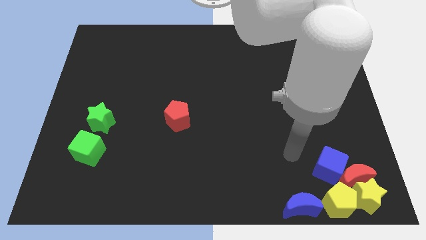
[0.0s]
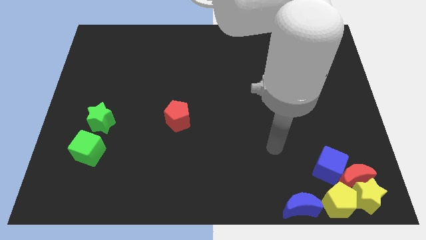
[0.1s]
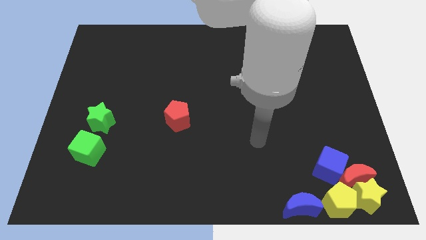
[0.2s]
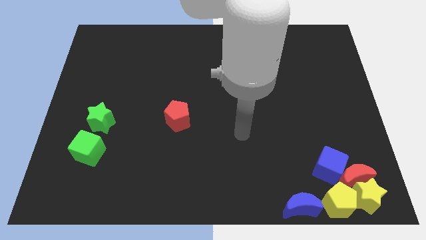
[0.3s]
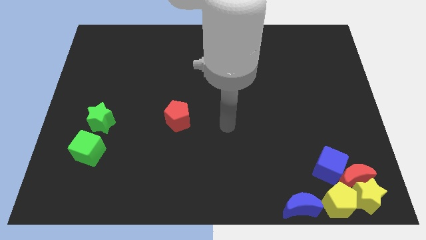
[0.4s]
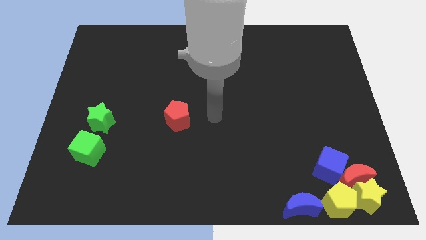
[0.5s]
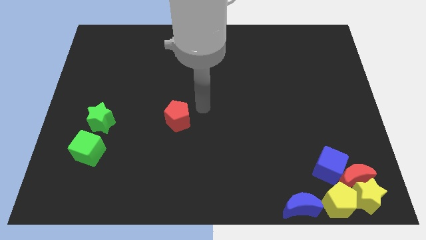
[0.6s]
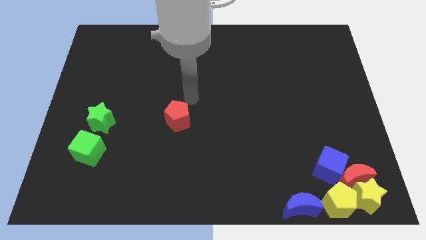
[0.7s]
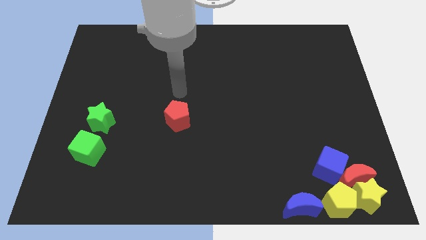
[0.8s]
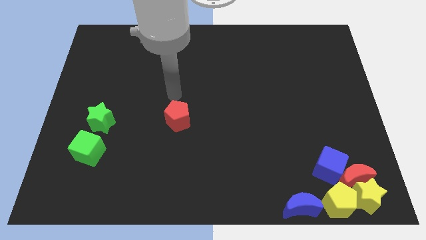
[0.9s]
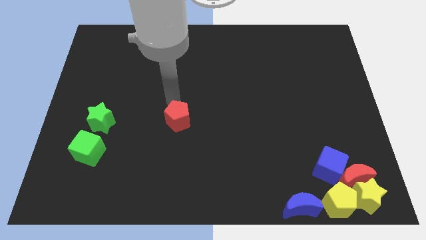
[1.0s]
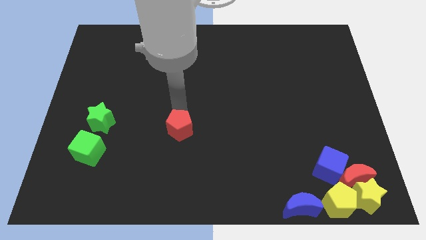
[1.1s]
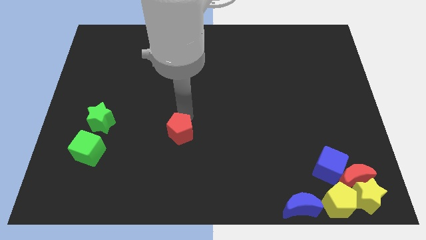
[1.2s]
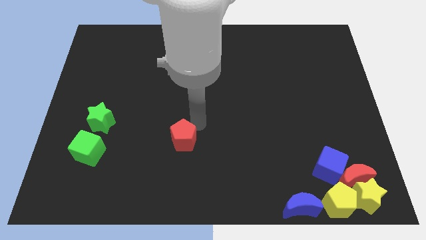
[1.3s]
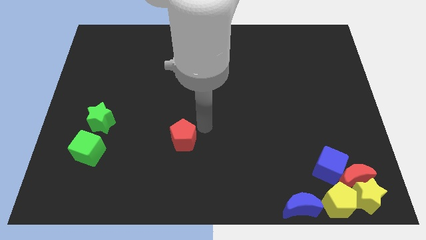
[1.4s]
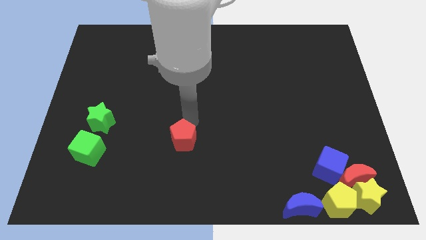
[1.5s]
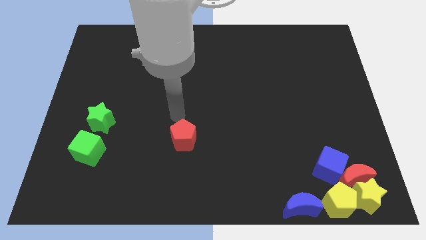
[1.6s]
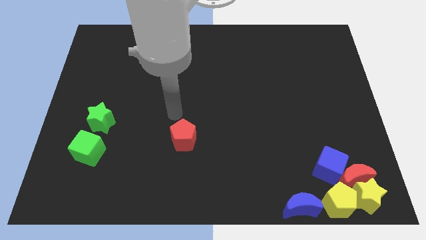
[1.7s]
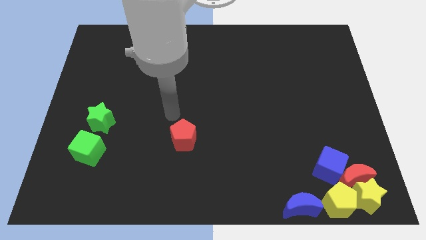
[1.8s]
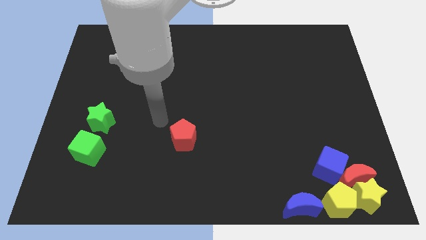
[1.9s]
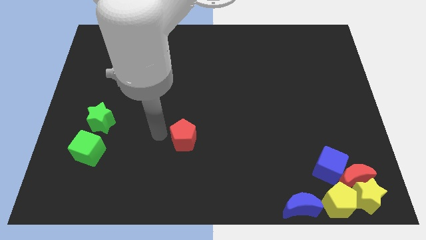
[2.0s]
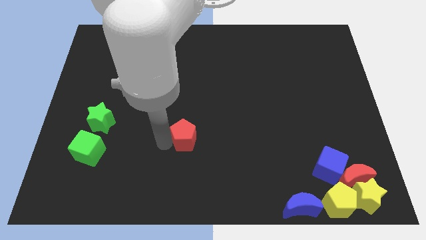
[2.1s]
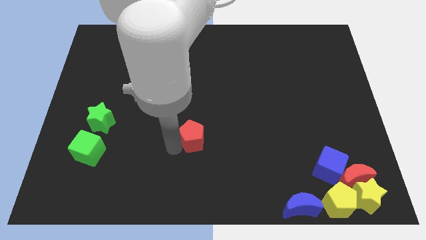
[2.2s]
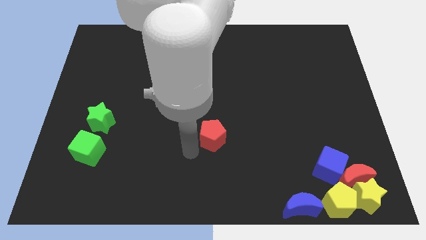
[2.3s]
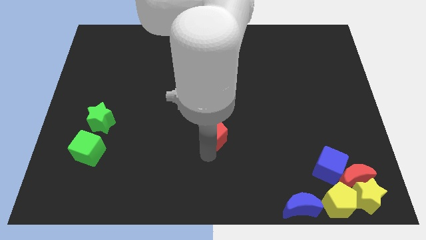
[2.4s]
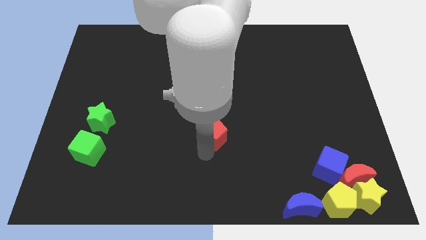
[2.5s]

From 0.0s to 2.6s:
slide the red pentagon towards the center of the board

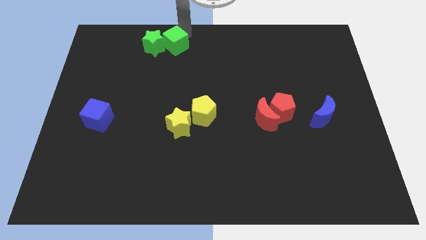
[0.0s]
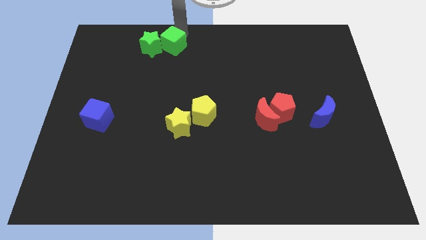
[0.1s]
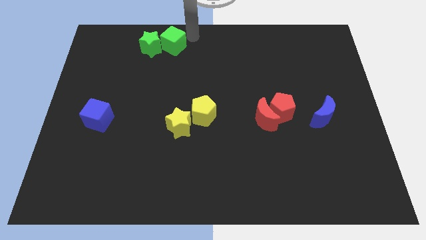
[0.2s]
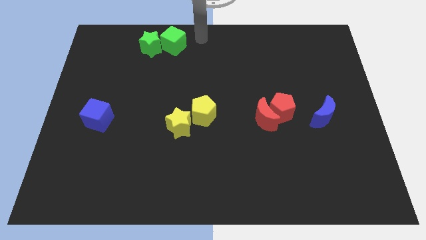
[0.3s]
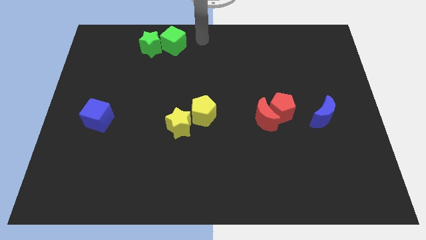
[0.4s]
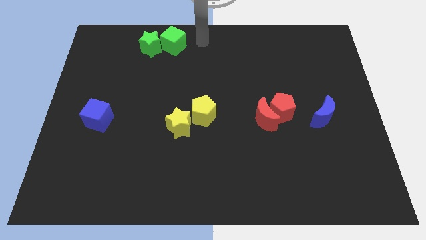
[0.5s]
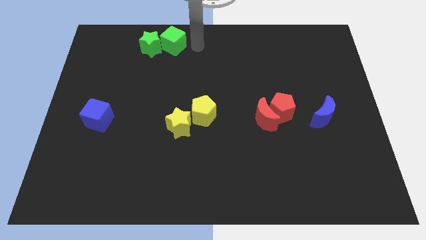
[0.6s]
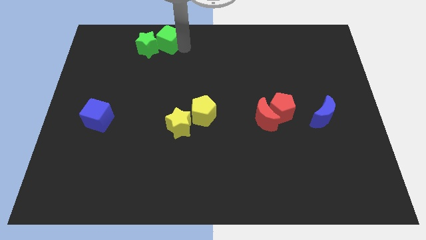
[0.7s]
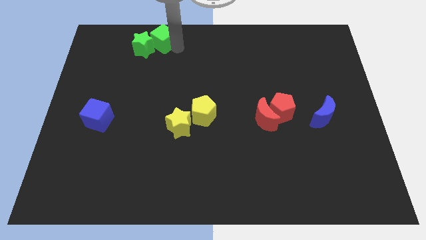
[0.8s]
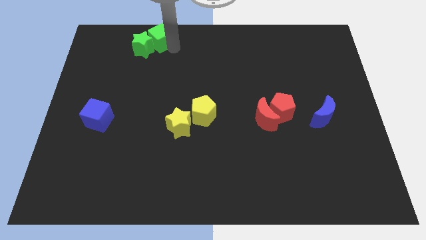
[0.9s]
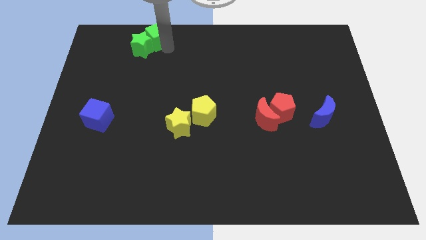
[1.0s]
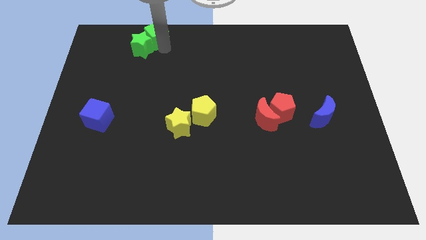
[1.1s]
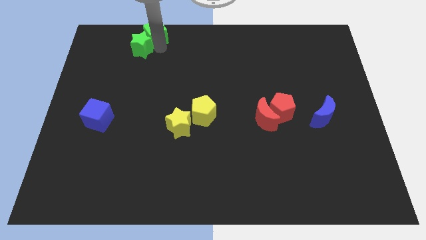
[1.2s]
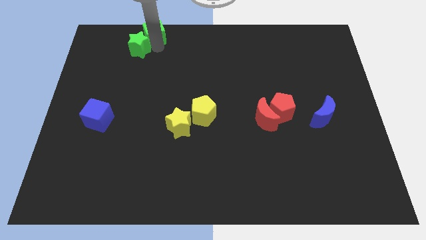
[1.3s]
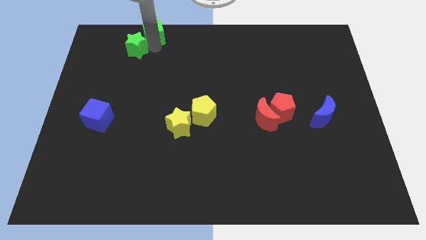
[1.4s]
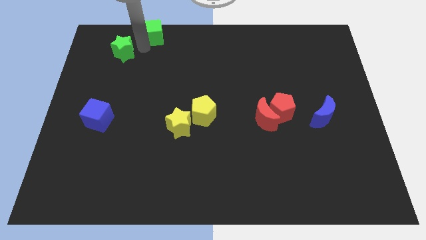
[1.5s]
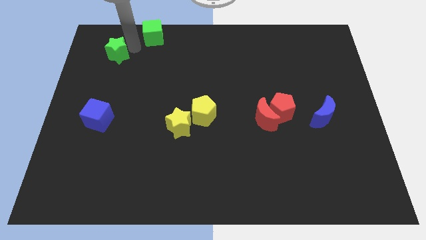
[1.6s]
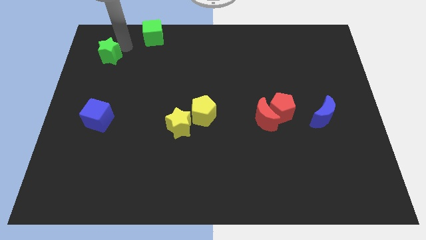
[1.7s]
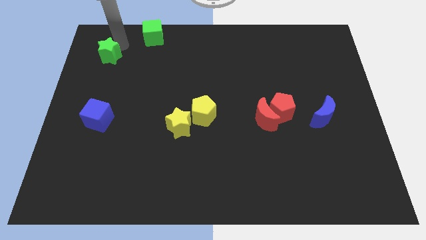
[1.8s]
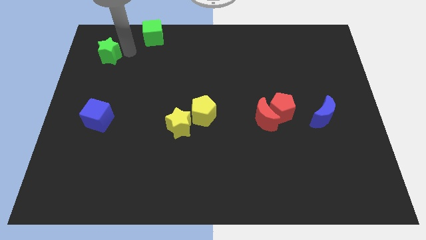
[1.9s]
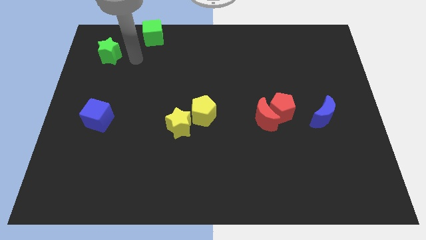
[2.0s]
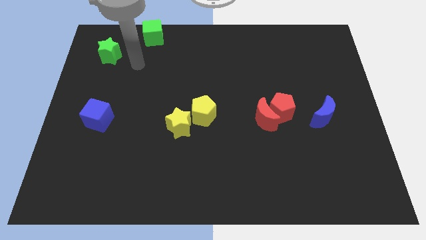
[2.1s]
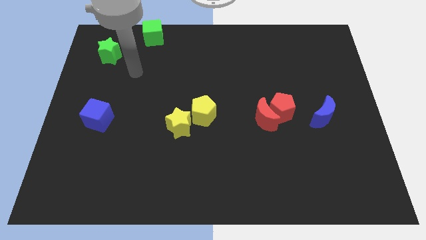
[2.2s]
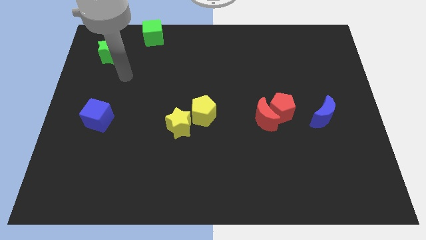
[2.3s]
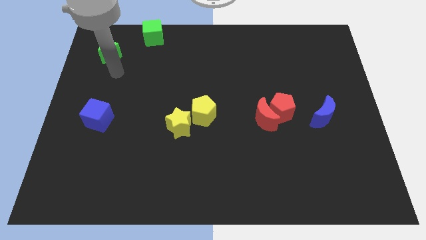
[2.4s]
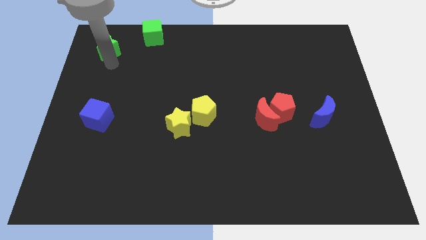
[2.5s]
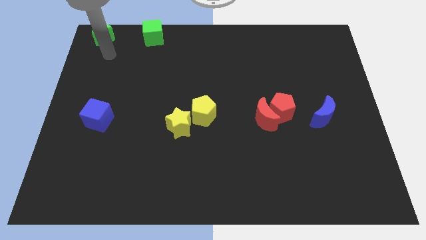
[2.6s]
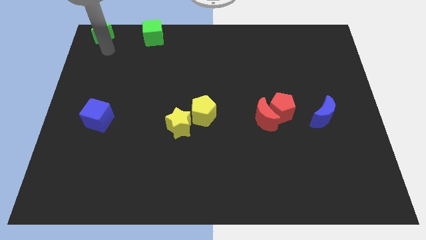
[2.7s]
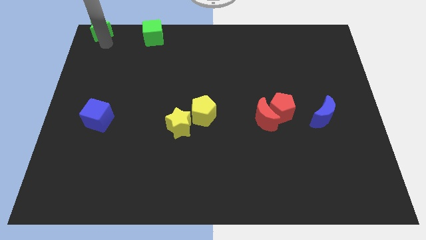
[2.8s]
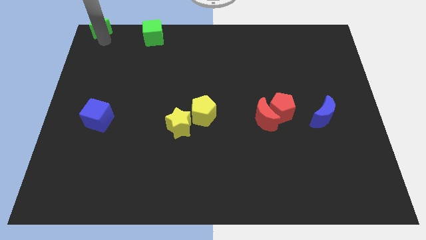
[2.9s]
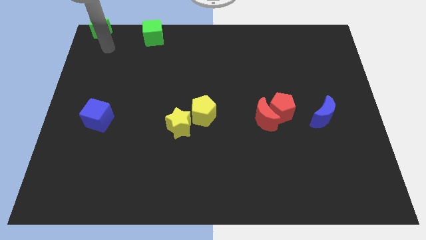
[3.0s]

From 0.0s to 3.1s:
separate green blocks from each other

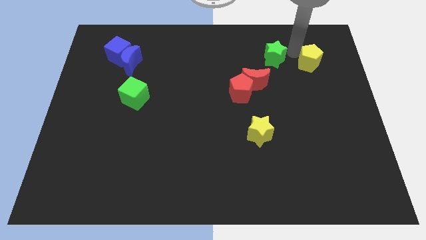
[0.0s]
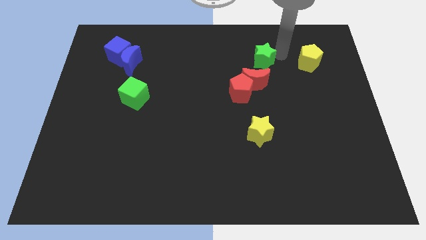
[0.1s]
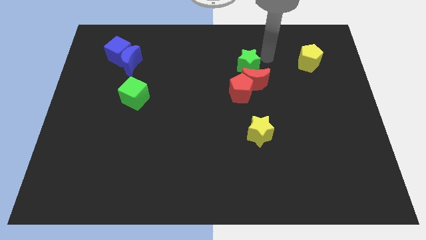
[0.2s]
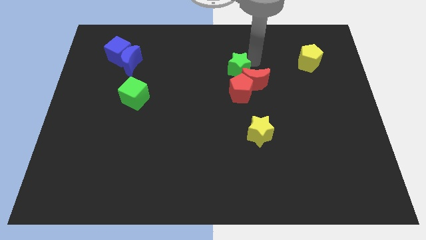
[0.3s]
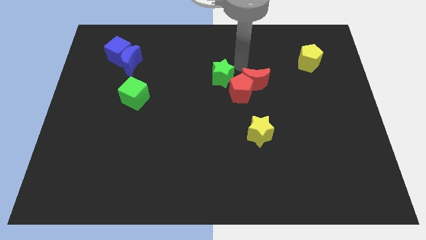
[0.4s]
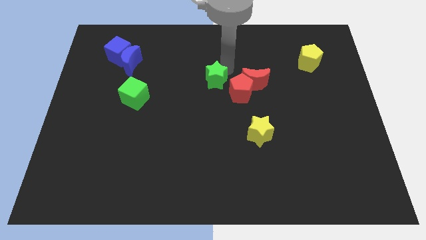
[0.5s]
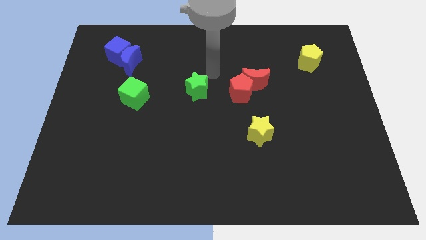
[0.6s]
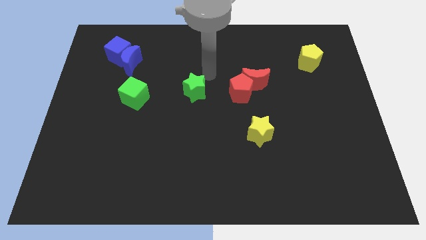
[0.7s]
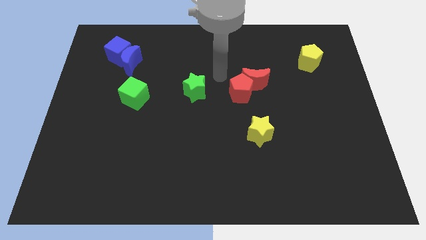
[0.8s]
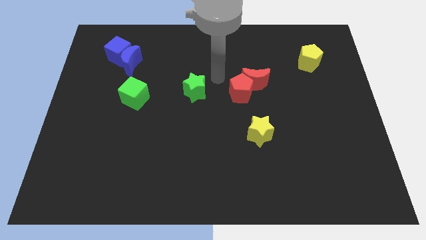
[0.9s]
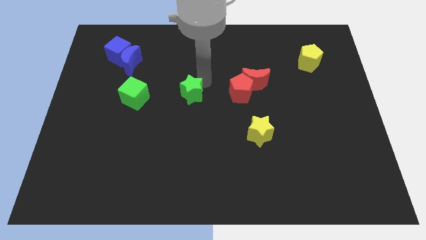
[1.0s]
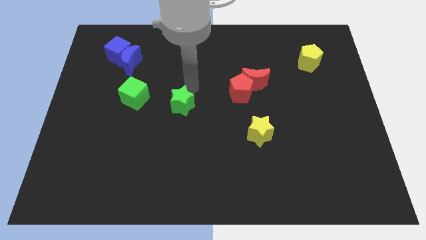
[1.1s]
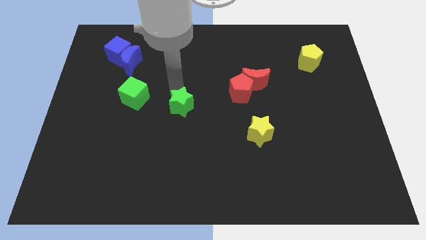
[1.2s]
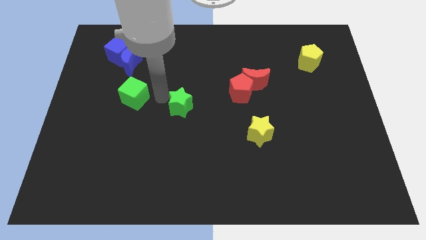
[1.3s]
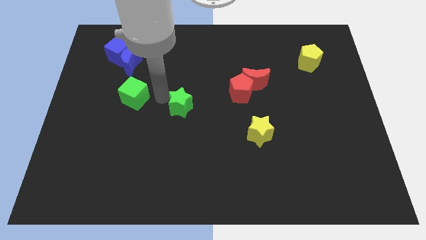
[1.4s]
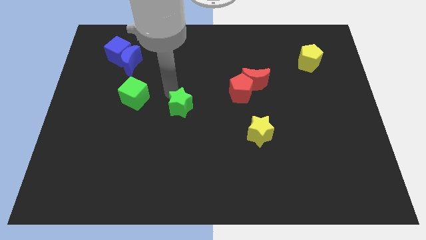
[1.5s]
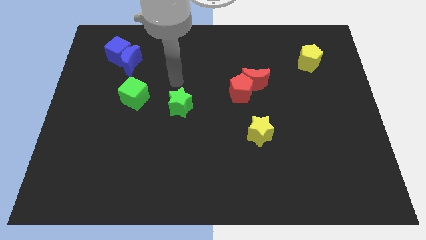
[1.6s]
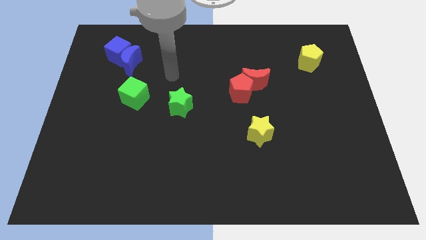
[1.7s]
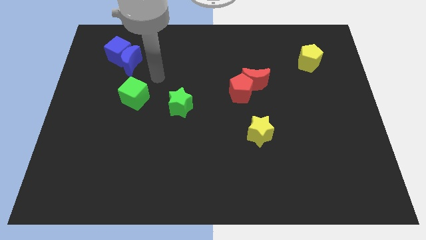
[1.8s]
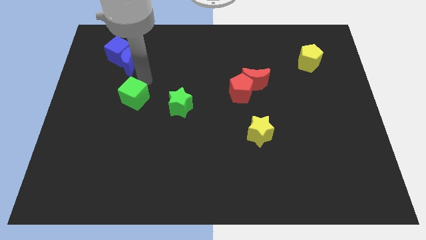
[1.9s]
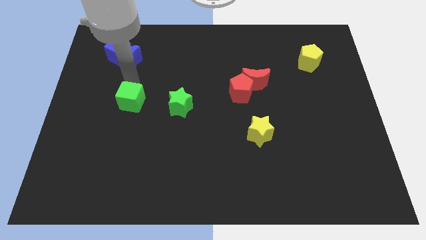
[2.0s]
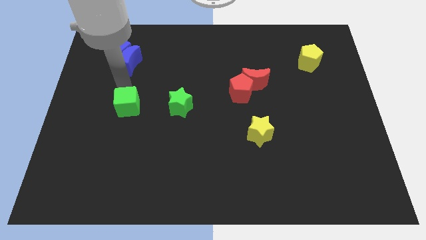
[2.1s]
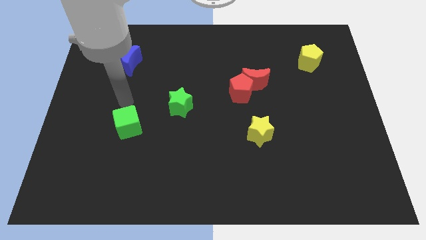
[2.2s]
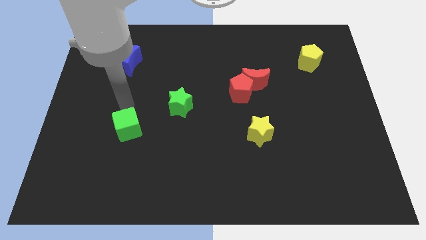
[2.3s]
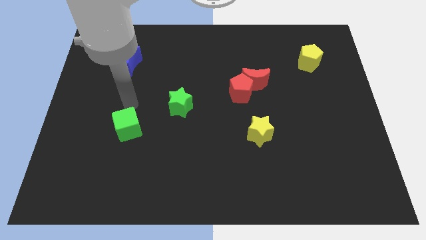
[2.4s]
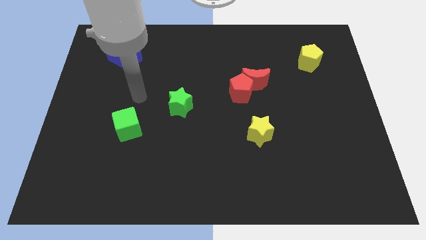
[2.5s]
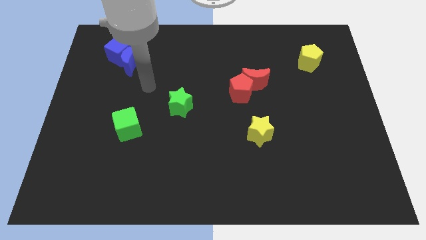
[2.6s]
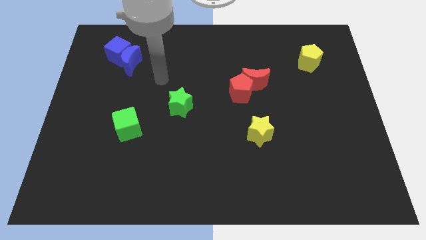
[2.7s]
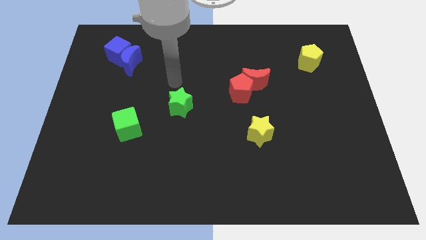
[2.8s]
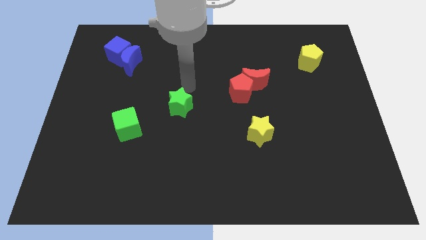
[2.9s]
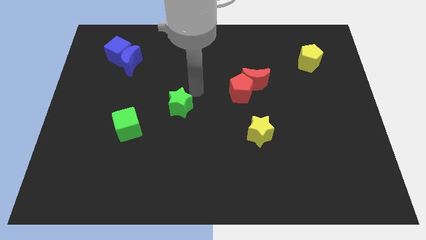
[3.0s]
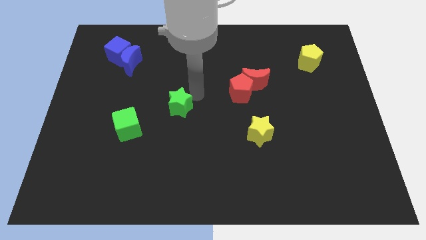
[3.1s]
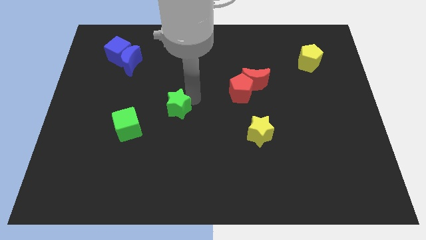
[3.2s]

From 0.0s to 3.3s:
place the green cube diagonally to the
